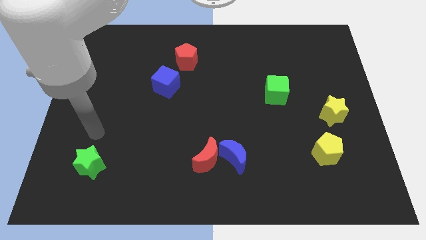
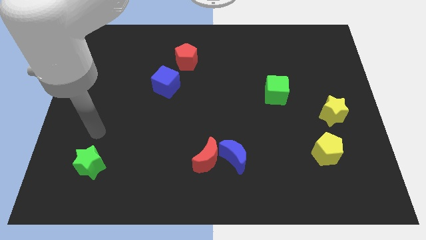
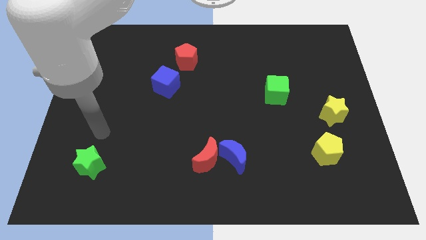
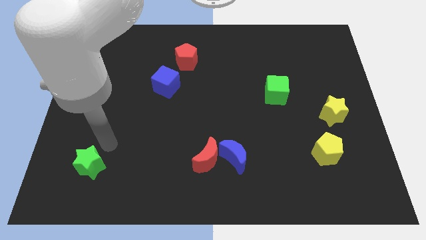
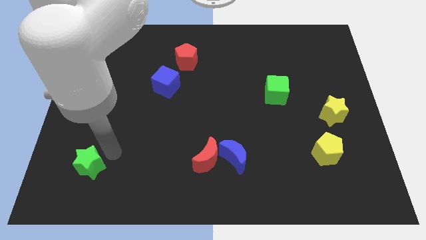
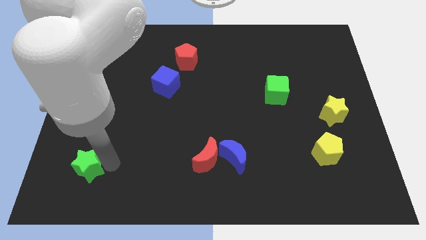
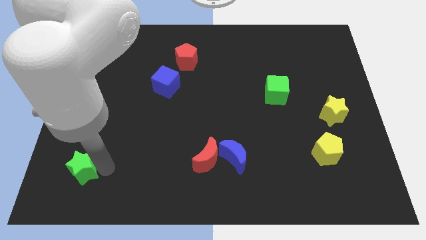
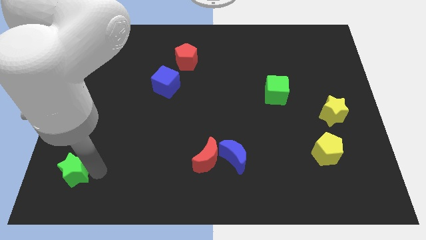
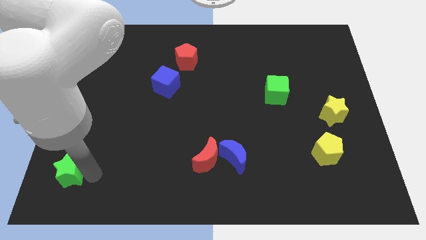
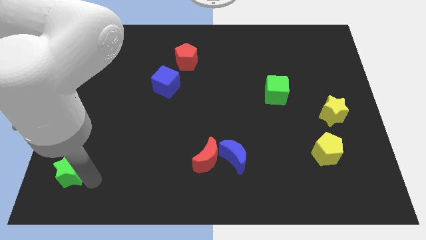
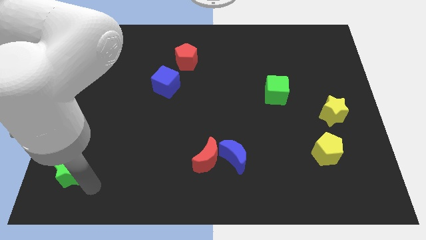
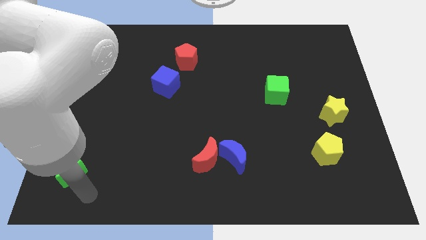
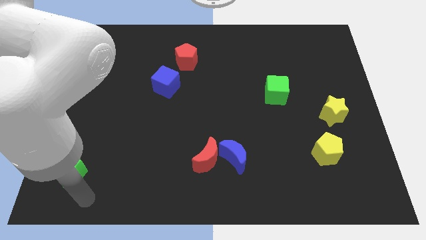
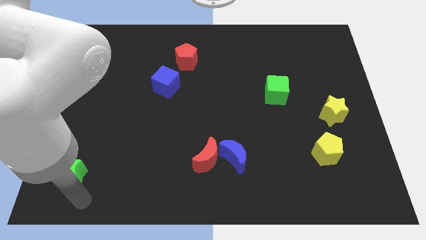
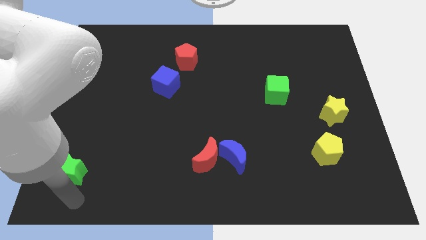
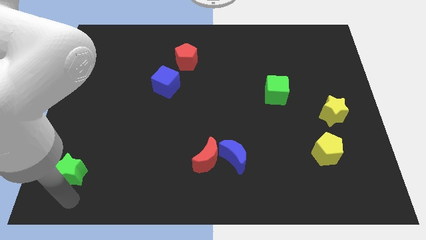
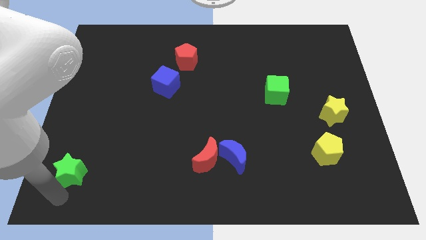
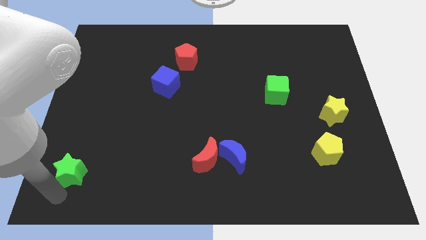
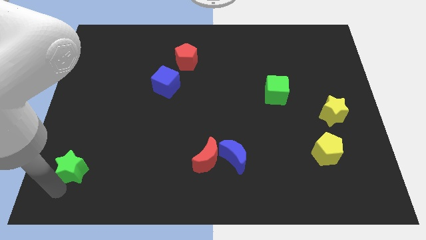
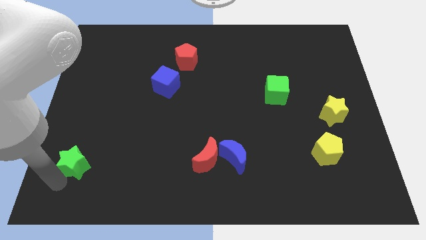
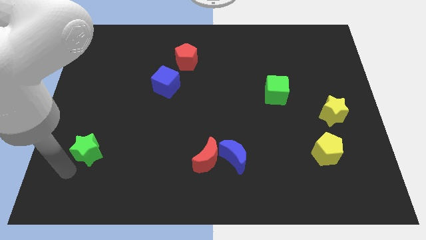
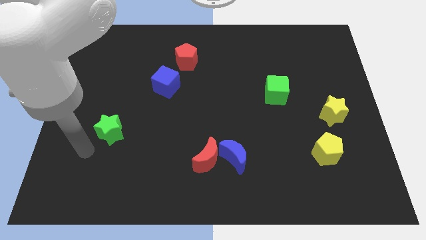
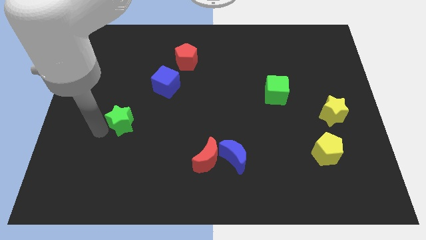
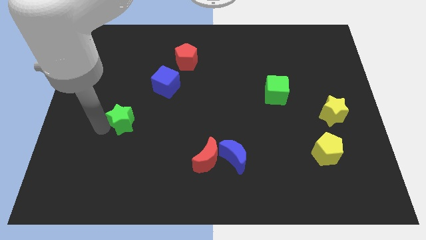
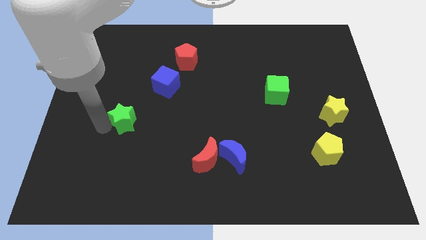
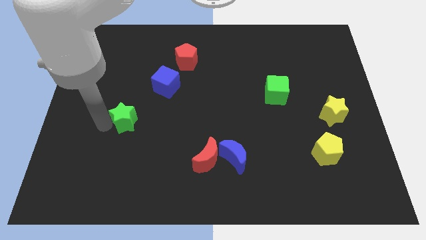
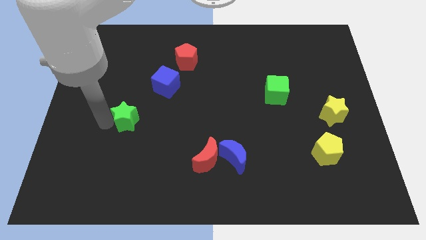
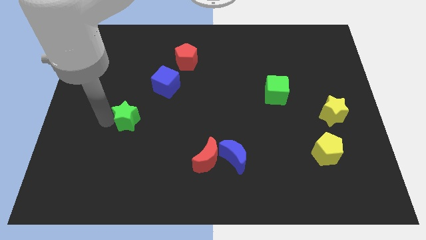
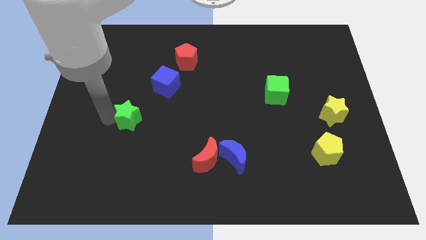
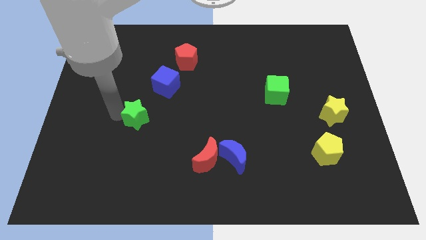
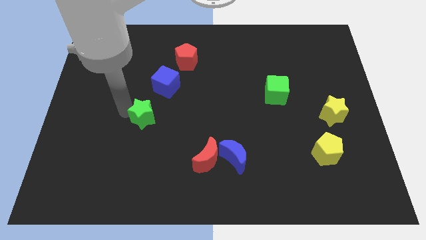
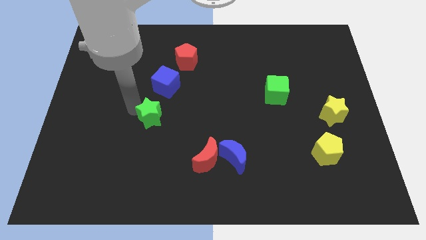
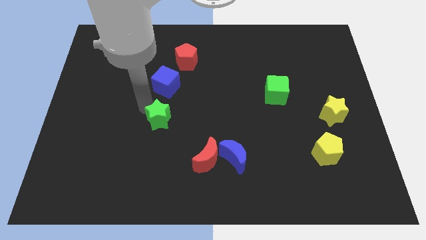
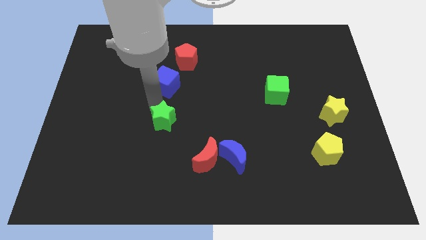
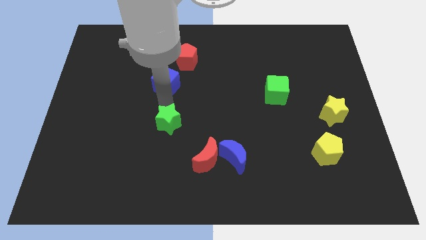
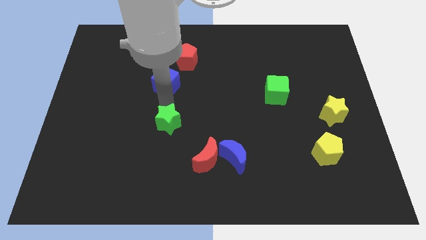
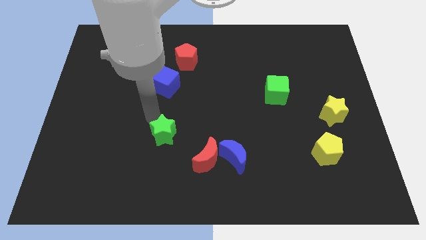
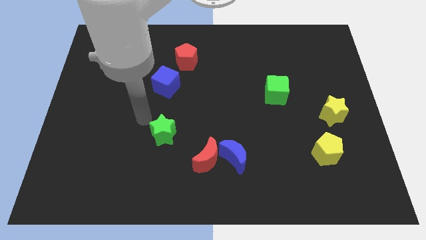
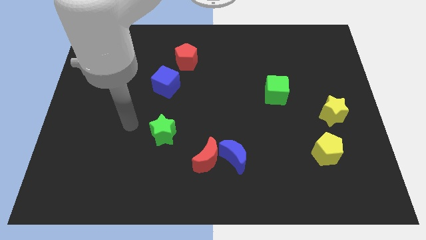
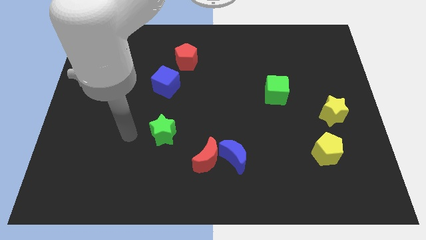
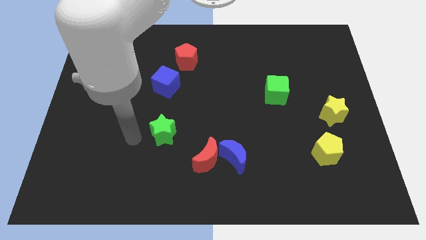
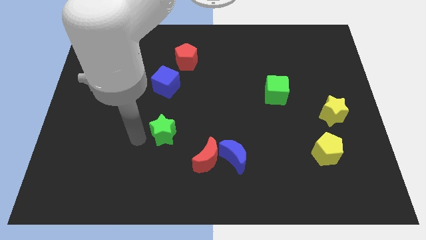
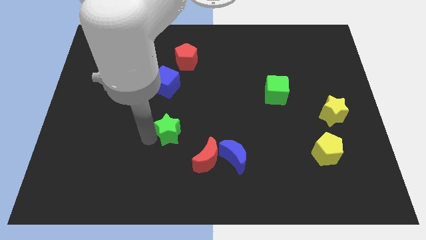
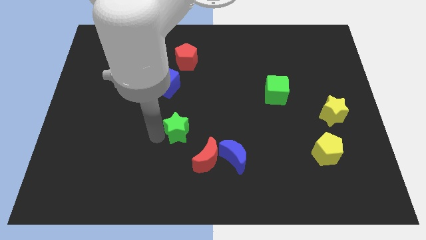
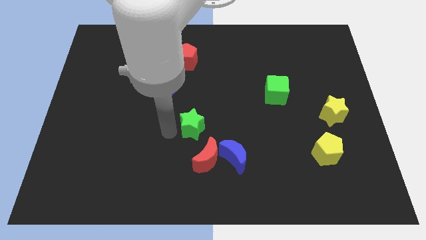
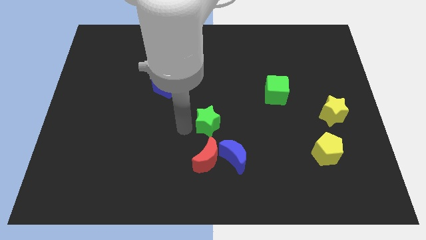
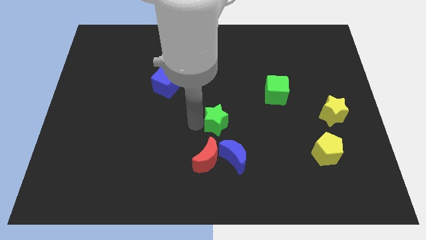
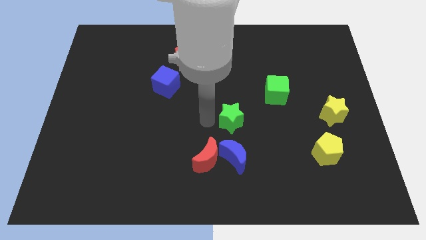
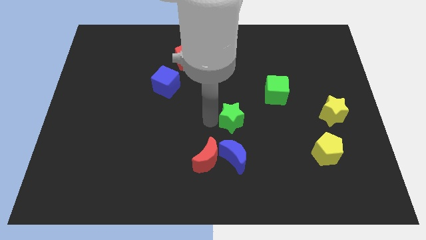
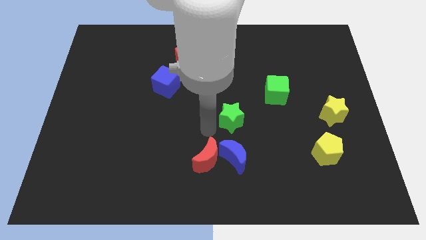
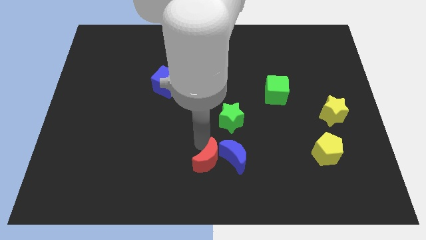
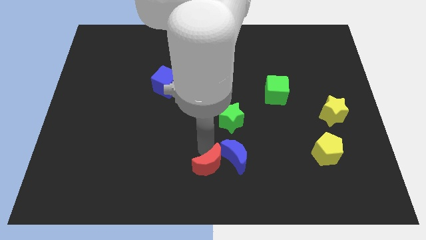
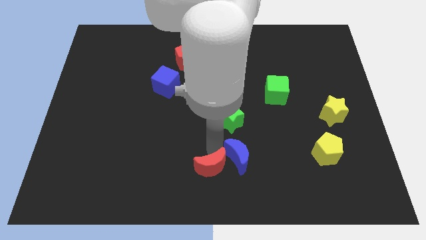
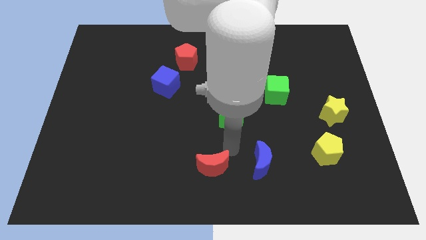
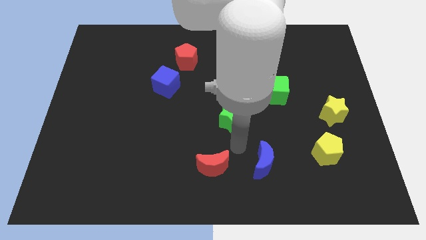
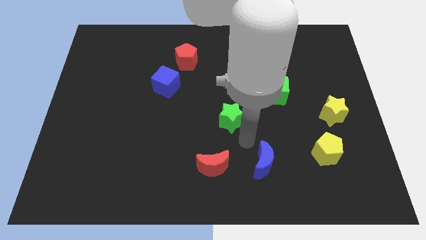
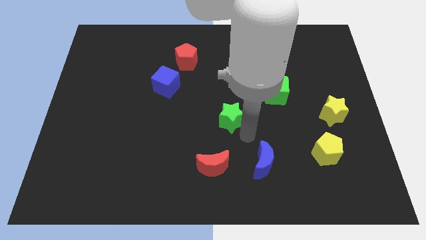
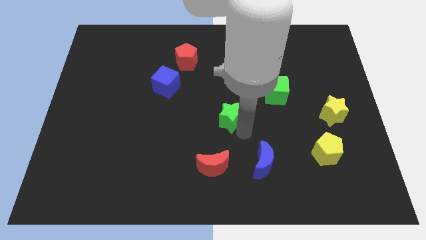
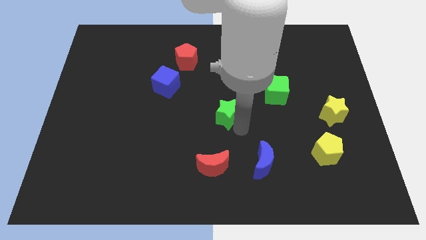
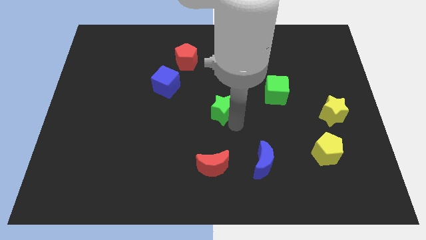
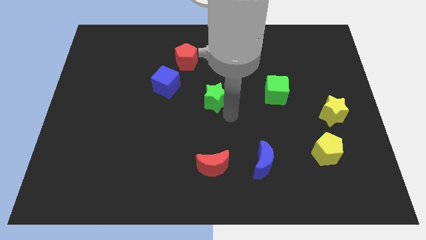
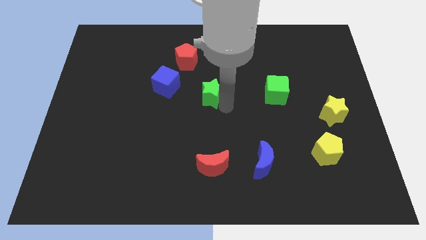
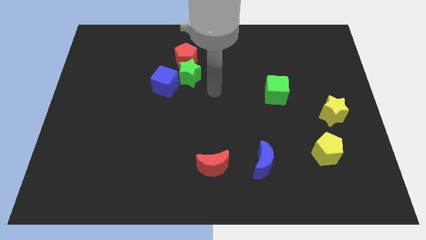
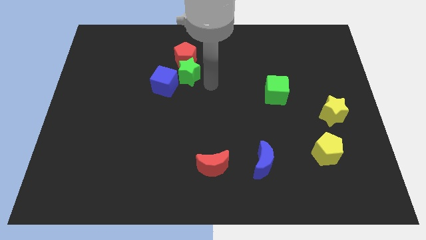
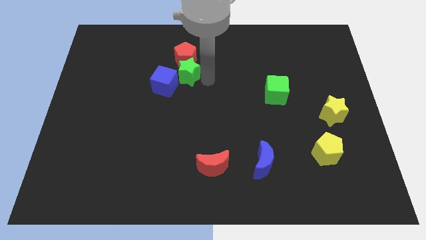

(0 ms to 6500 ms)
push the green star towards the red pentagon

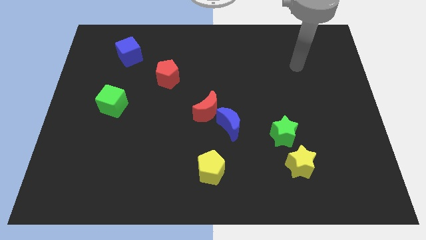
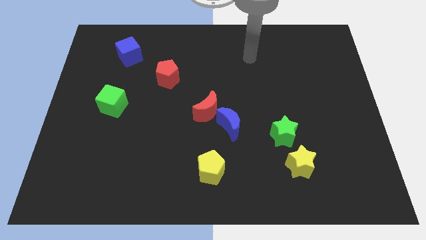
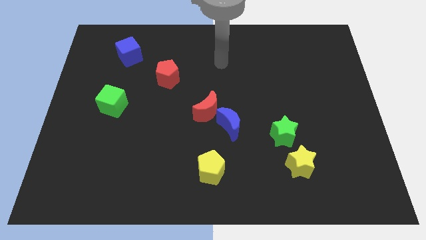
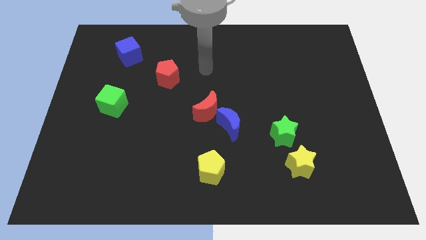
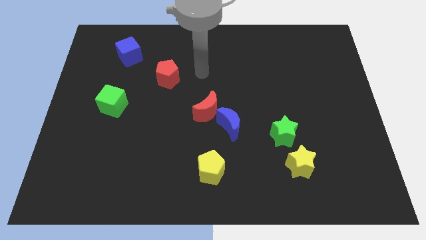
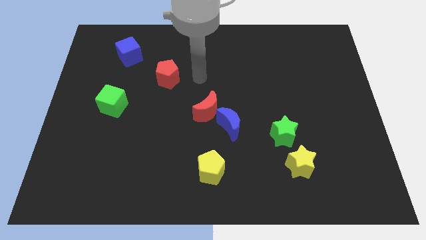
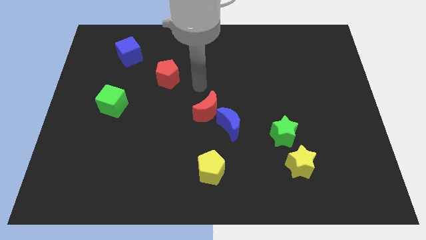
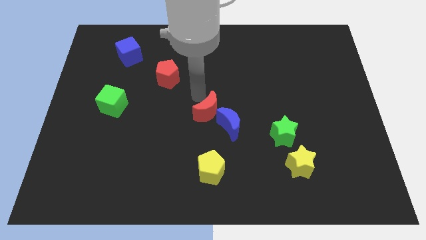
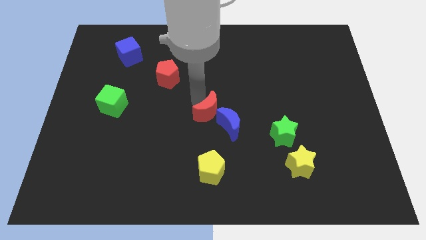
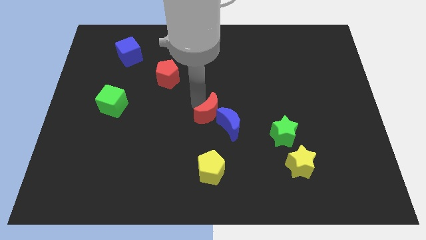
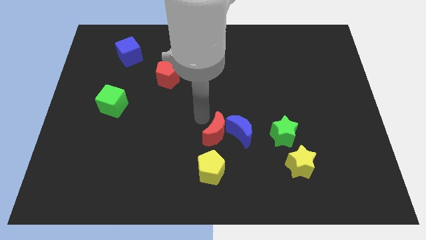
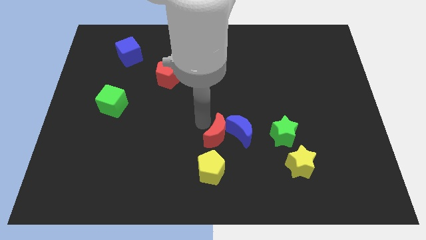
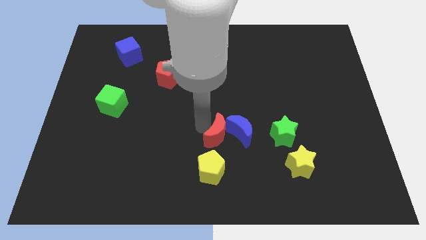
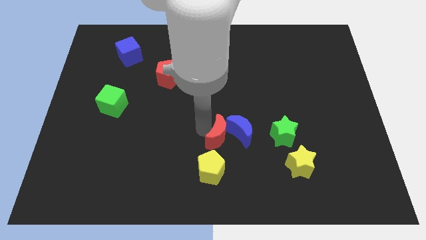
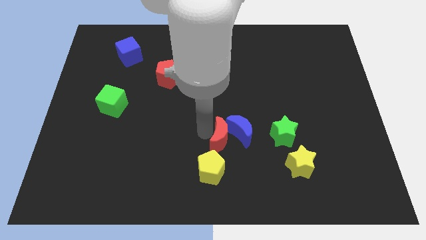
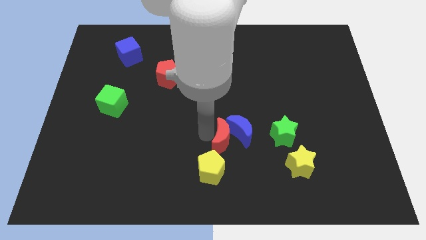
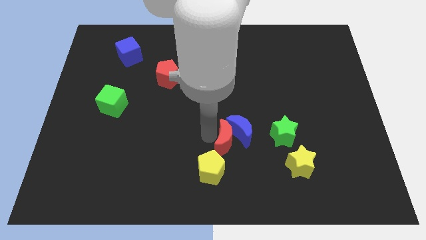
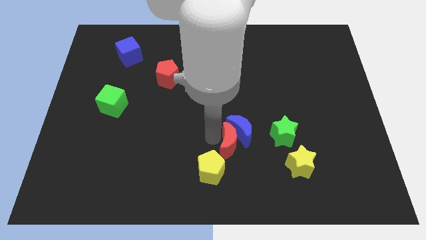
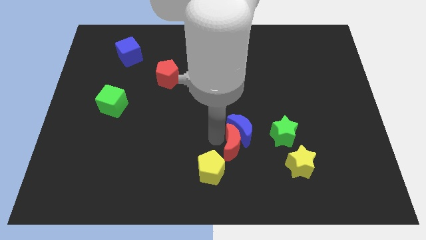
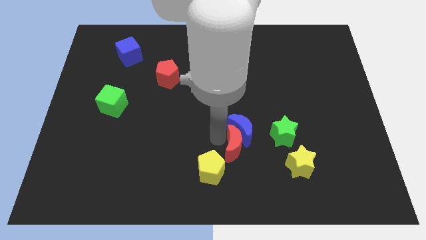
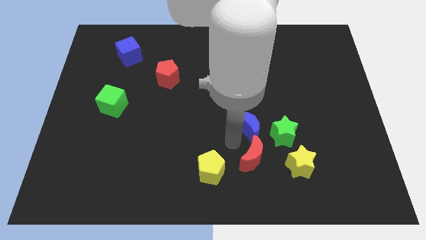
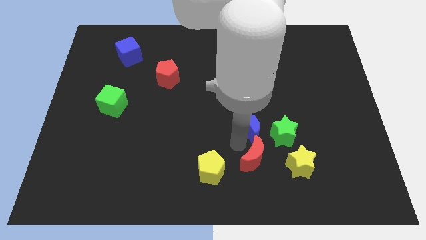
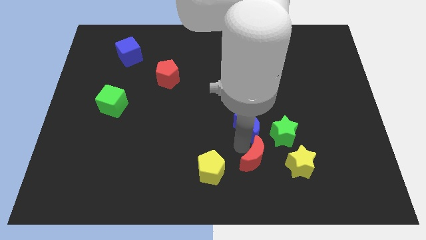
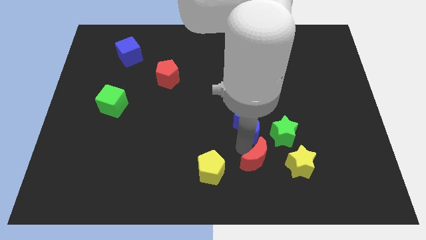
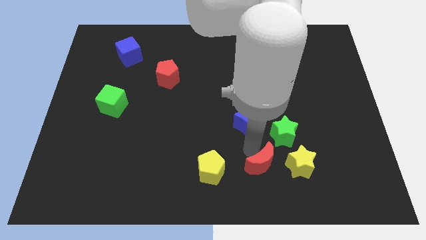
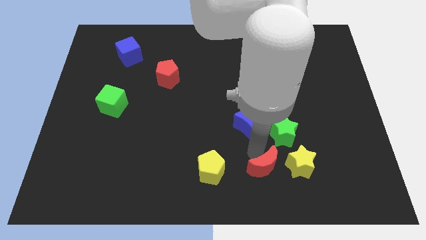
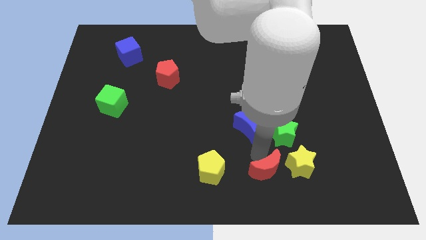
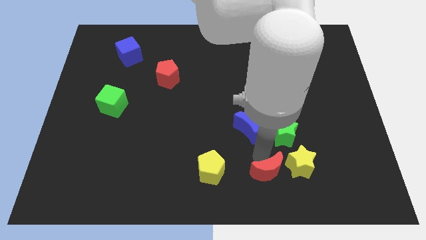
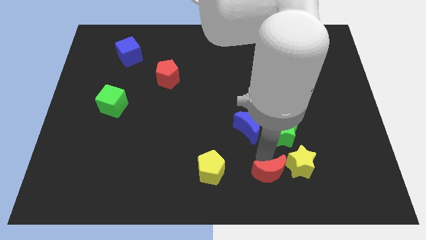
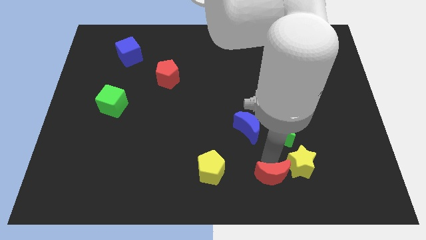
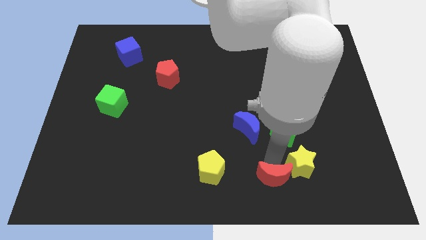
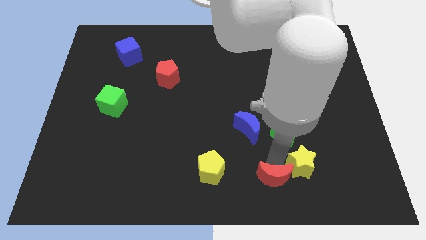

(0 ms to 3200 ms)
slide the red moon next to the yellow star
